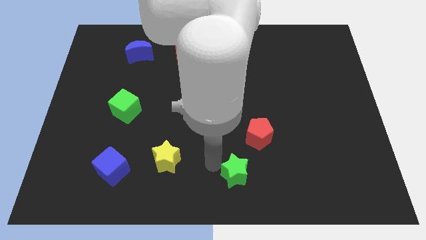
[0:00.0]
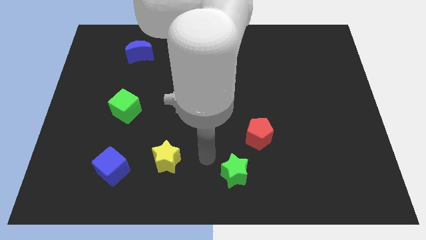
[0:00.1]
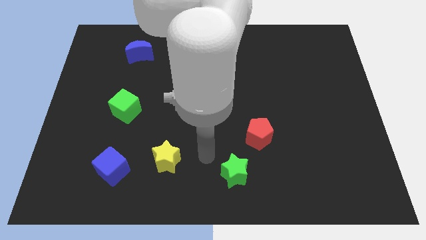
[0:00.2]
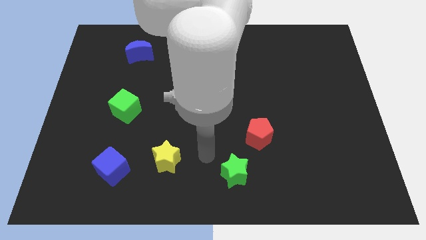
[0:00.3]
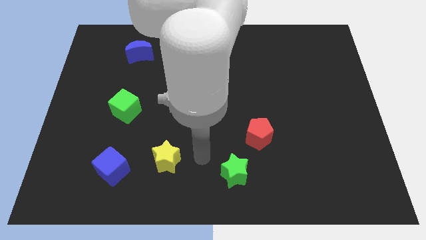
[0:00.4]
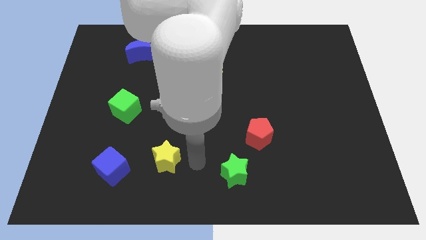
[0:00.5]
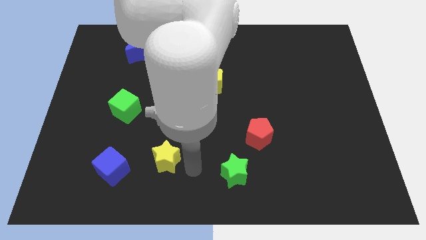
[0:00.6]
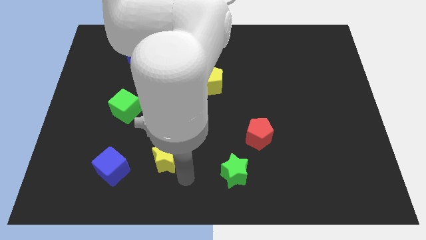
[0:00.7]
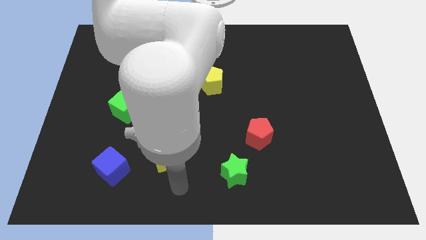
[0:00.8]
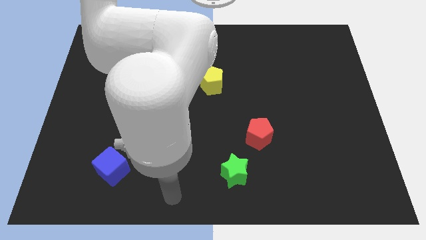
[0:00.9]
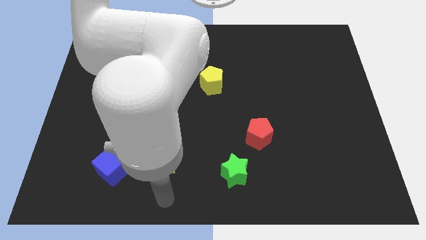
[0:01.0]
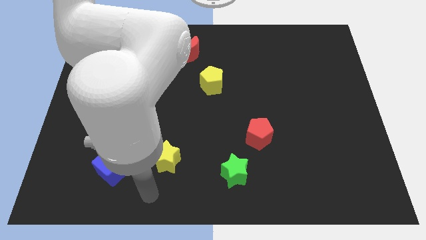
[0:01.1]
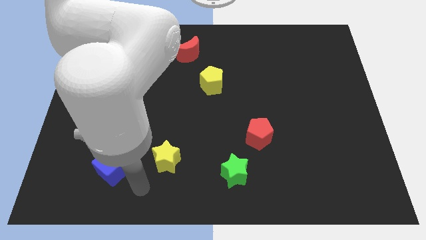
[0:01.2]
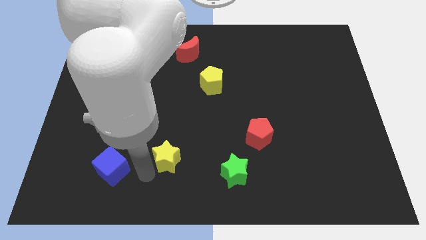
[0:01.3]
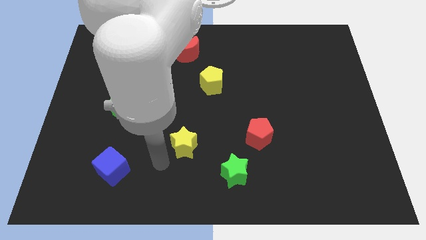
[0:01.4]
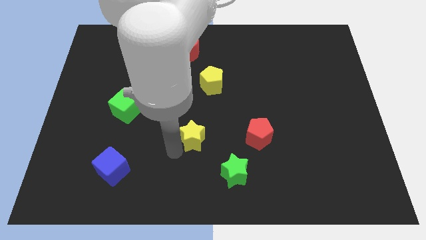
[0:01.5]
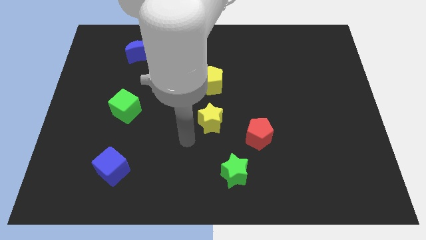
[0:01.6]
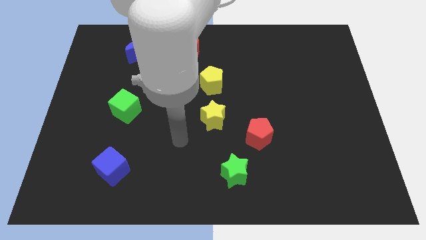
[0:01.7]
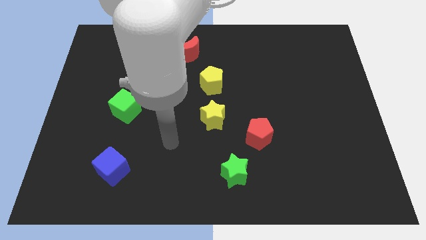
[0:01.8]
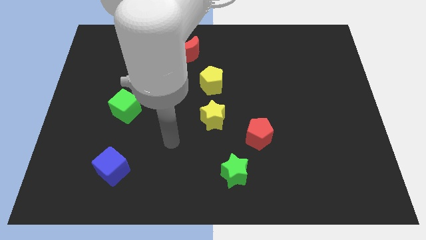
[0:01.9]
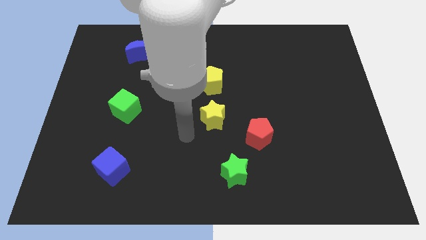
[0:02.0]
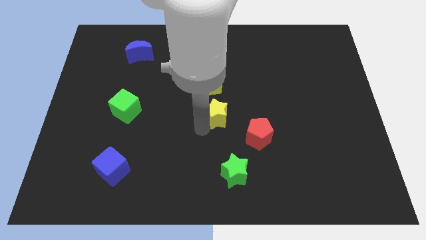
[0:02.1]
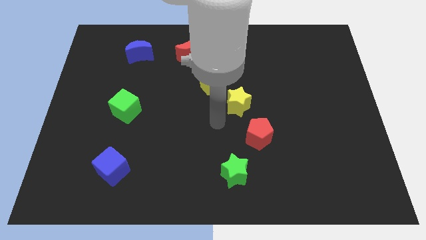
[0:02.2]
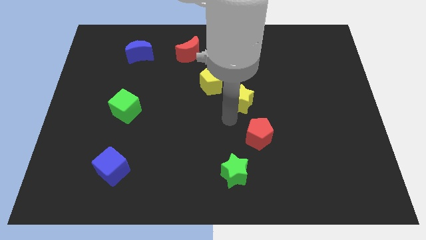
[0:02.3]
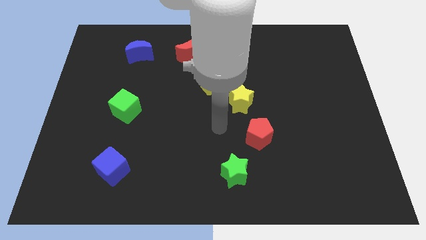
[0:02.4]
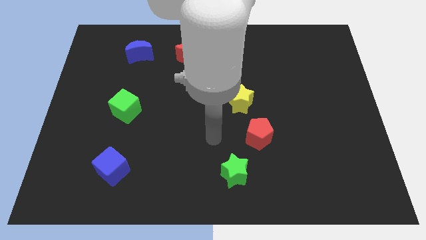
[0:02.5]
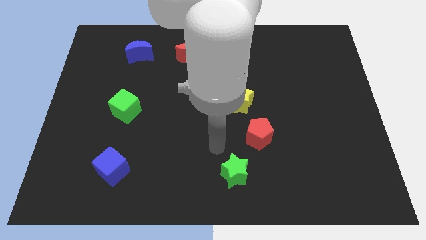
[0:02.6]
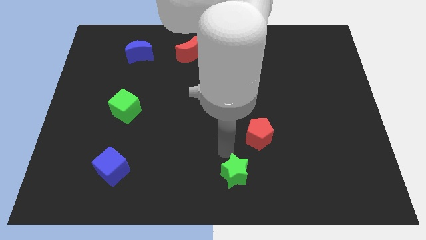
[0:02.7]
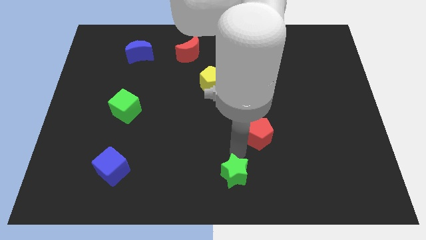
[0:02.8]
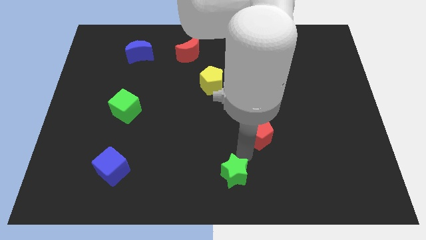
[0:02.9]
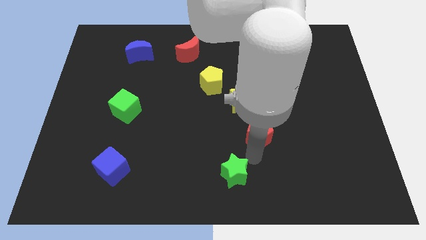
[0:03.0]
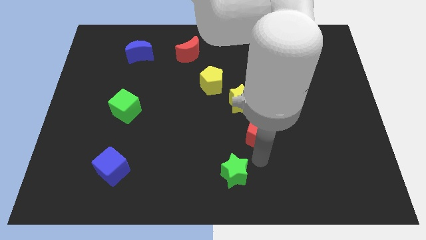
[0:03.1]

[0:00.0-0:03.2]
put the yellow star diagonally on the bottom right side yellow pentagon

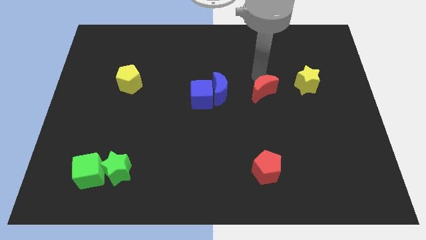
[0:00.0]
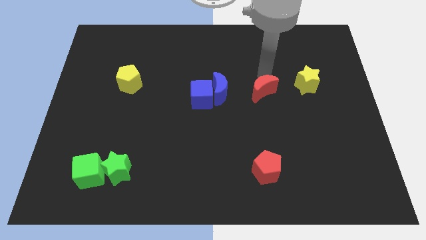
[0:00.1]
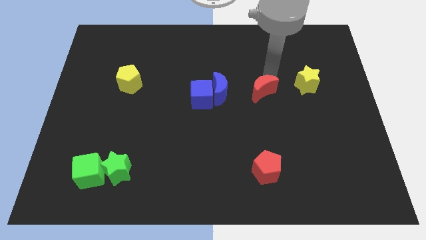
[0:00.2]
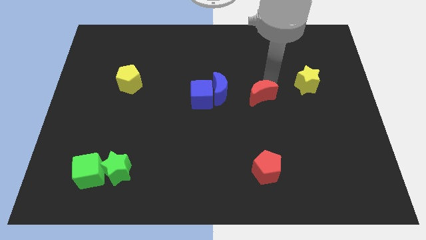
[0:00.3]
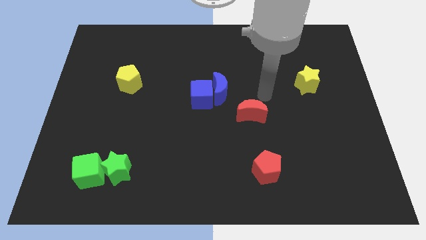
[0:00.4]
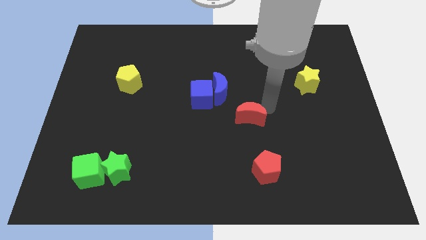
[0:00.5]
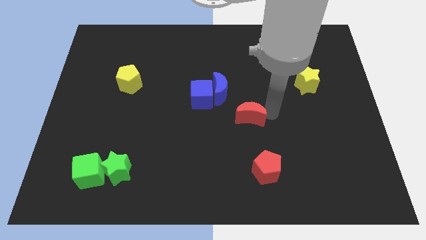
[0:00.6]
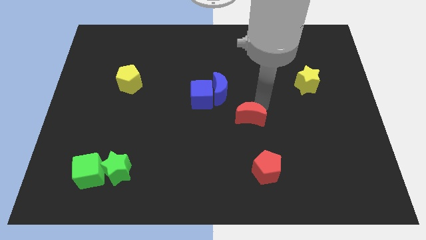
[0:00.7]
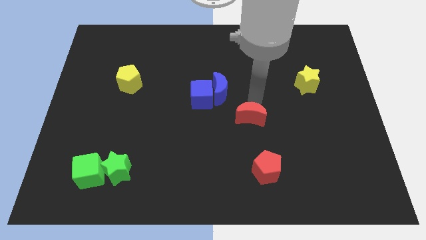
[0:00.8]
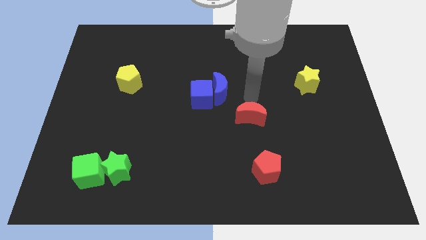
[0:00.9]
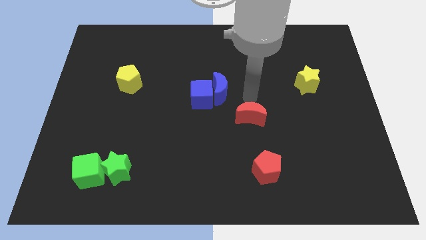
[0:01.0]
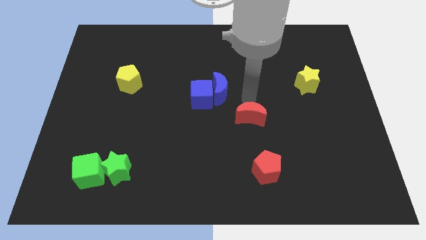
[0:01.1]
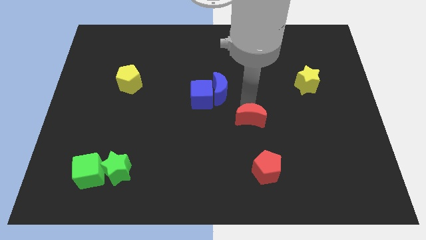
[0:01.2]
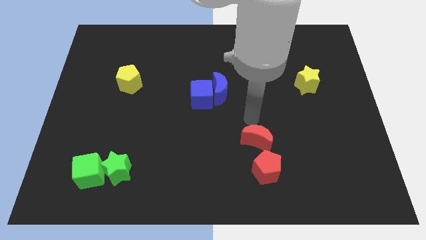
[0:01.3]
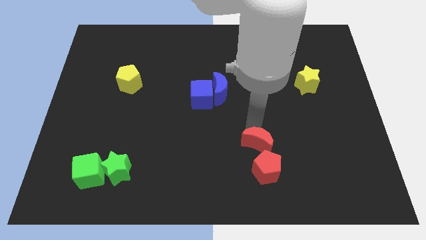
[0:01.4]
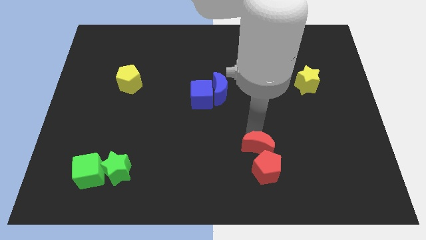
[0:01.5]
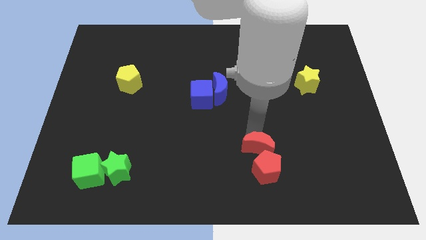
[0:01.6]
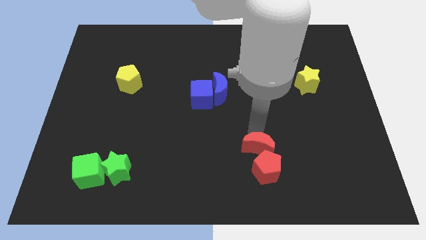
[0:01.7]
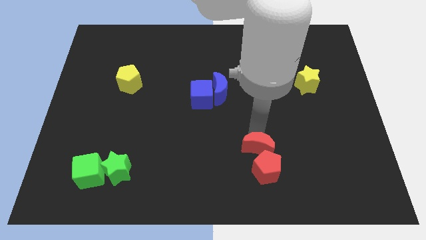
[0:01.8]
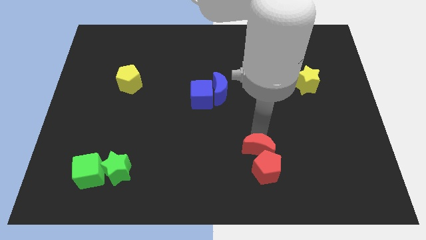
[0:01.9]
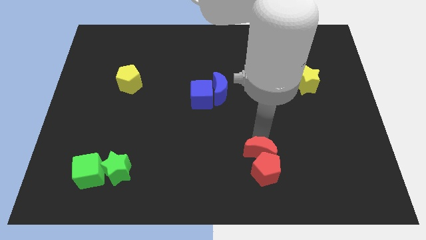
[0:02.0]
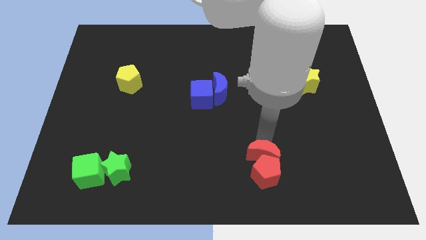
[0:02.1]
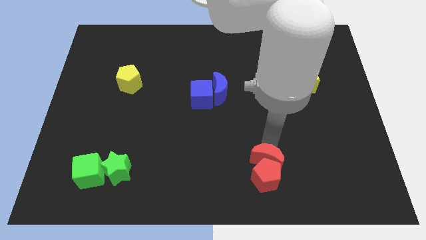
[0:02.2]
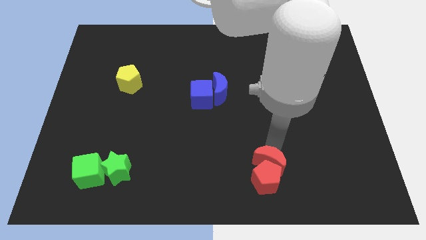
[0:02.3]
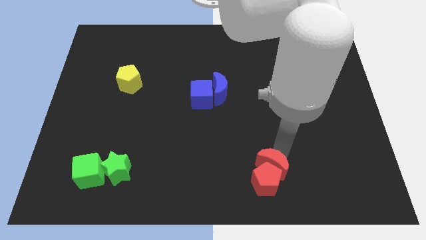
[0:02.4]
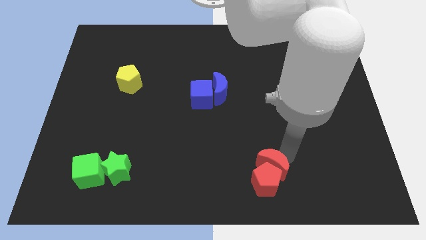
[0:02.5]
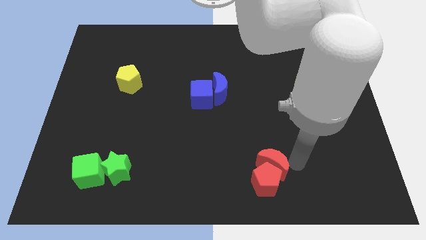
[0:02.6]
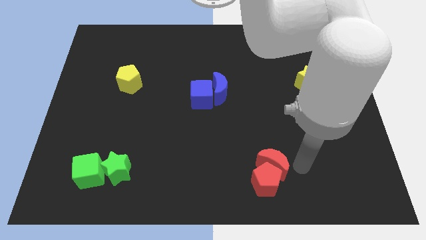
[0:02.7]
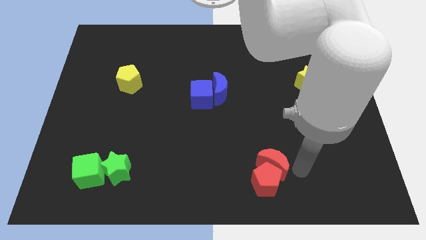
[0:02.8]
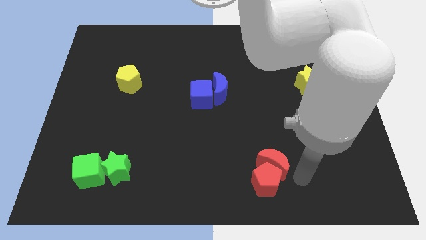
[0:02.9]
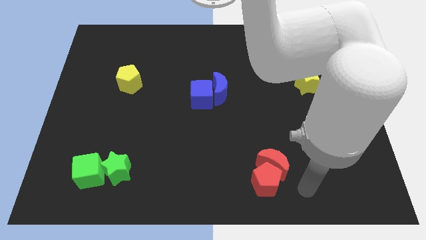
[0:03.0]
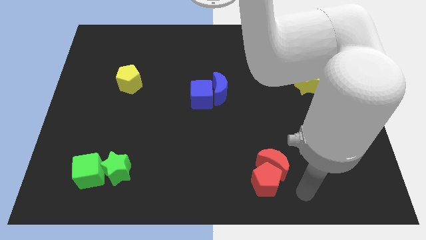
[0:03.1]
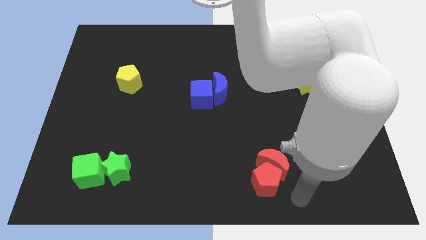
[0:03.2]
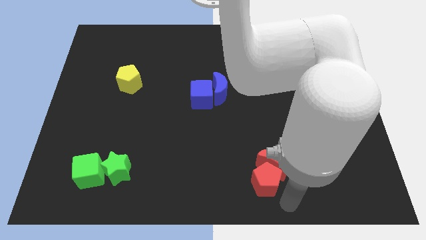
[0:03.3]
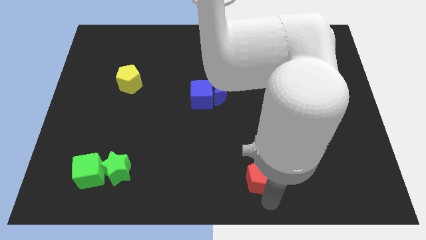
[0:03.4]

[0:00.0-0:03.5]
drag the red moon into the red pentagon

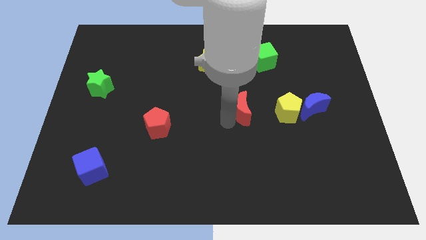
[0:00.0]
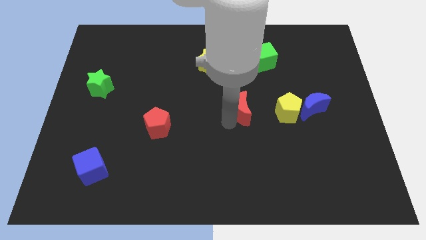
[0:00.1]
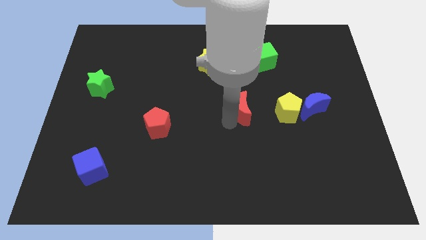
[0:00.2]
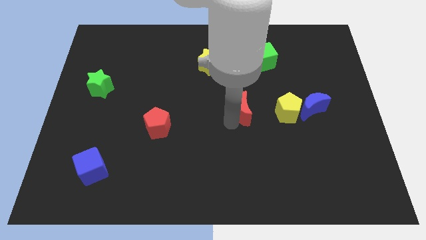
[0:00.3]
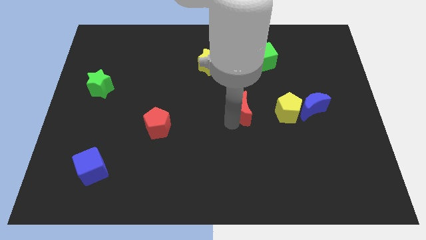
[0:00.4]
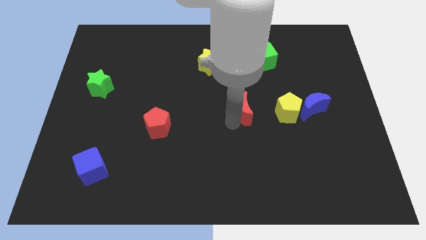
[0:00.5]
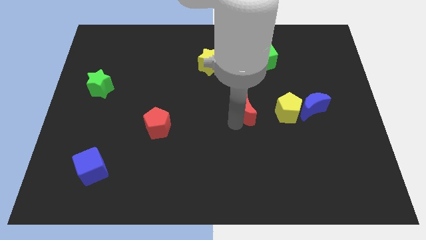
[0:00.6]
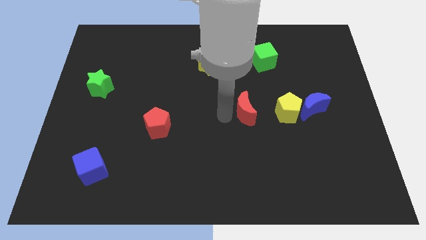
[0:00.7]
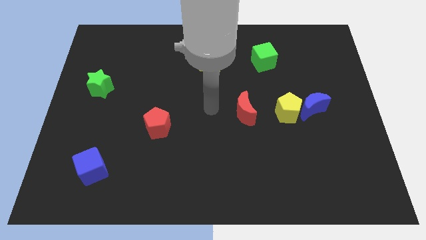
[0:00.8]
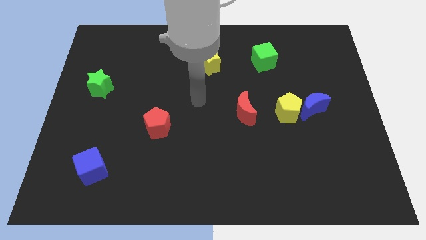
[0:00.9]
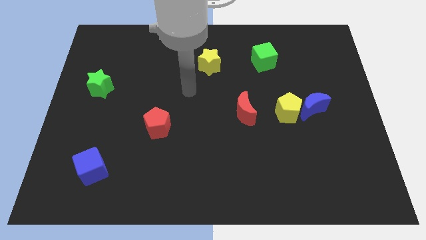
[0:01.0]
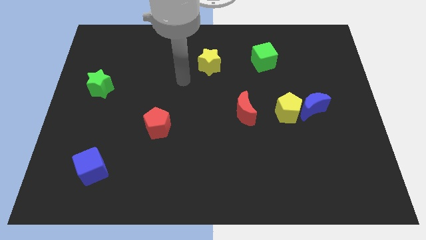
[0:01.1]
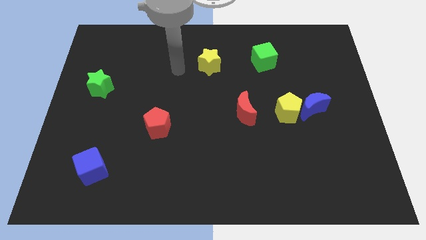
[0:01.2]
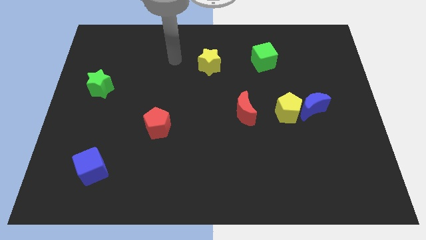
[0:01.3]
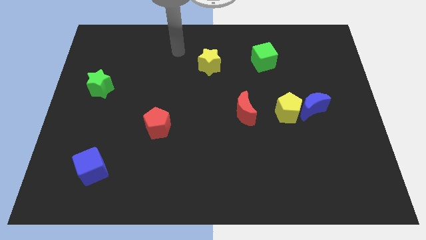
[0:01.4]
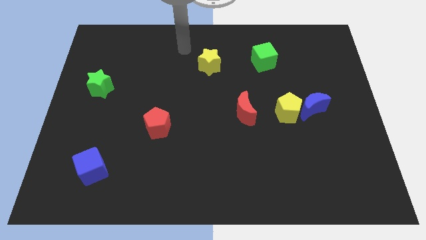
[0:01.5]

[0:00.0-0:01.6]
move your hand away from the red moon

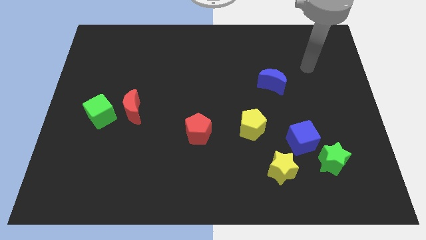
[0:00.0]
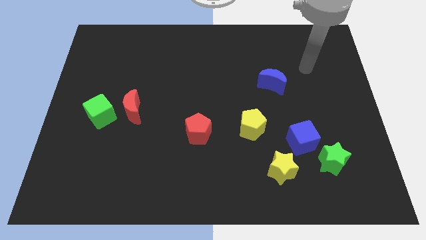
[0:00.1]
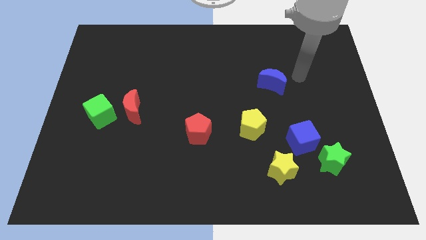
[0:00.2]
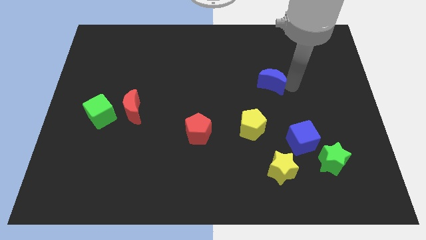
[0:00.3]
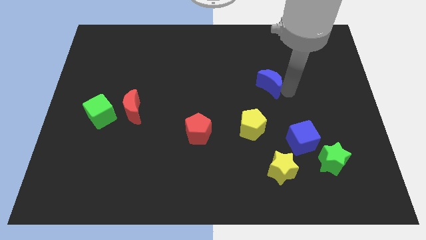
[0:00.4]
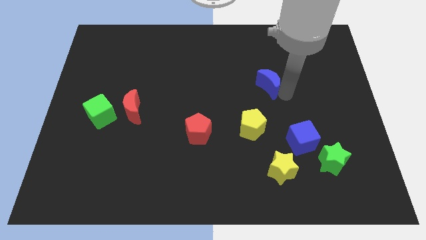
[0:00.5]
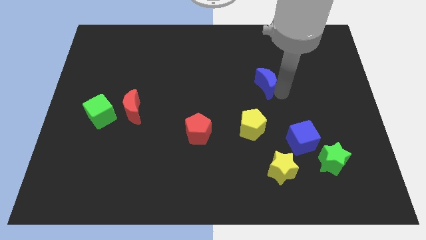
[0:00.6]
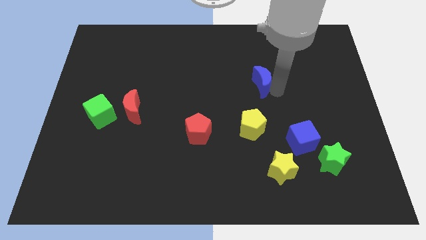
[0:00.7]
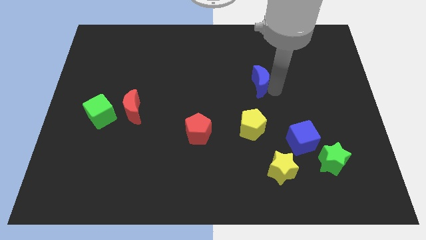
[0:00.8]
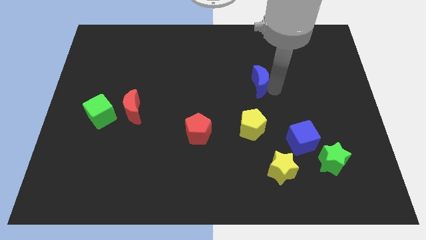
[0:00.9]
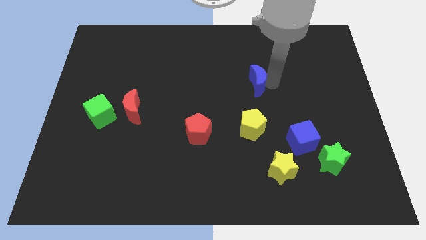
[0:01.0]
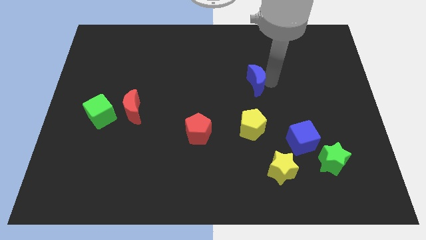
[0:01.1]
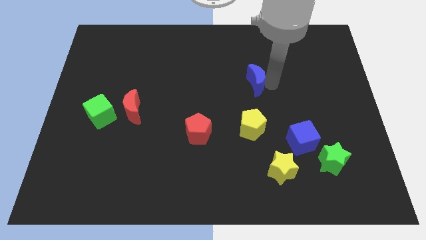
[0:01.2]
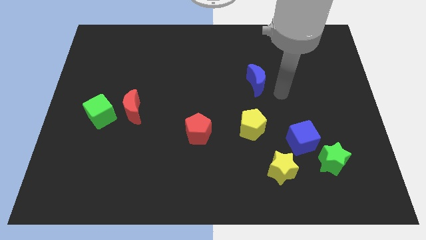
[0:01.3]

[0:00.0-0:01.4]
push the blue crescent to the top of the yellow pentagon
